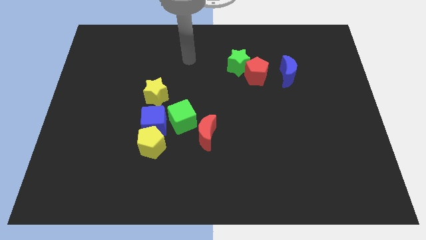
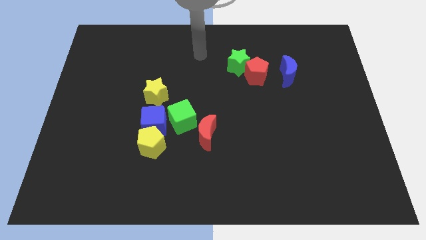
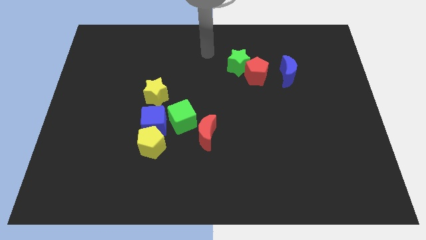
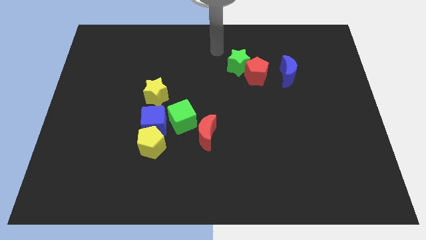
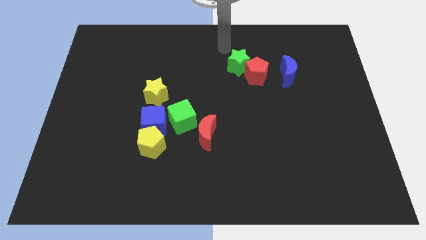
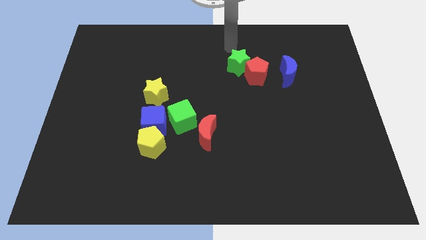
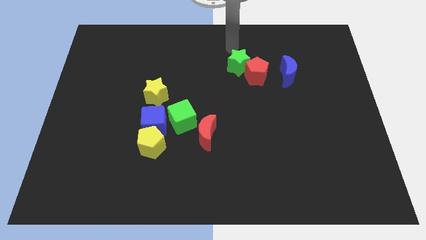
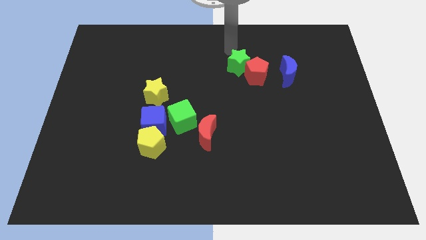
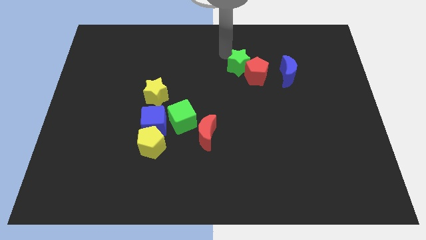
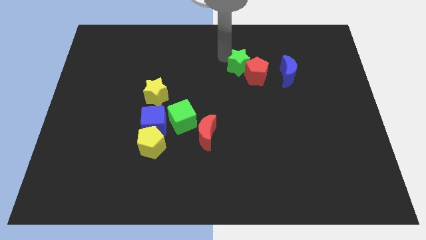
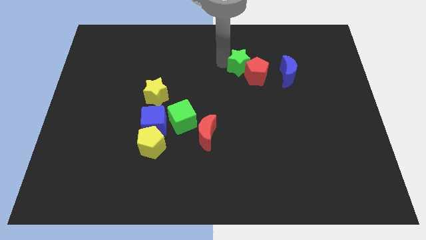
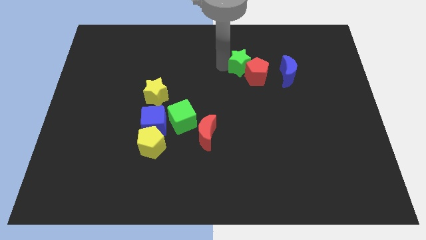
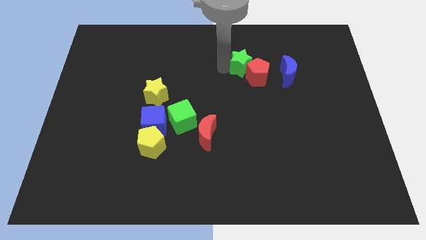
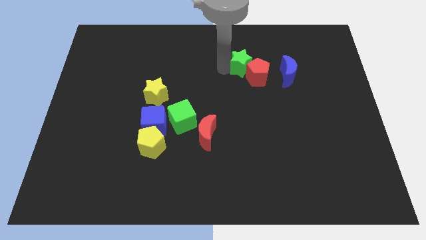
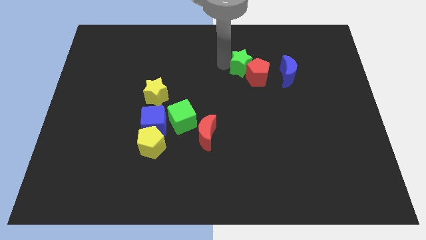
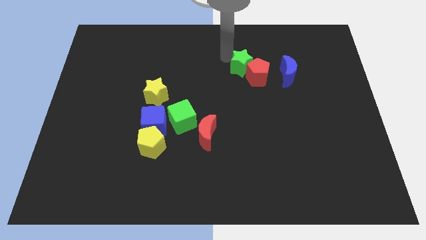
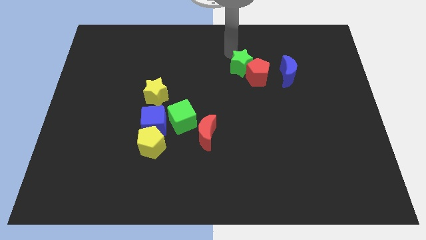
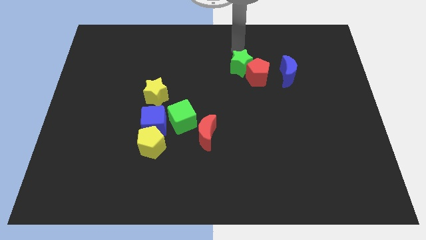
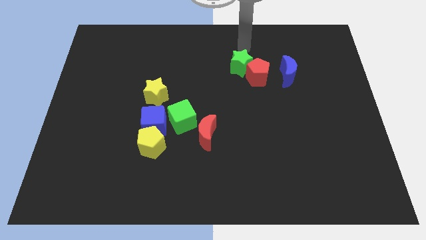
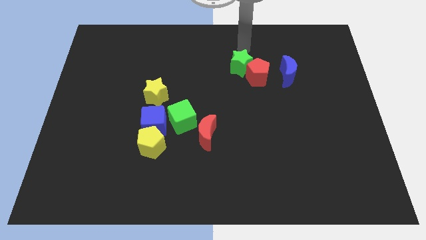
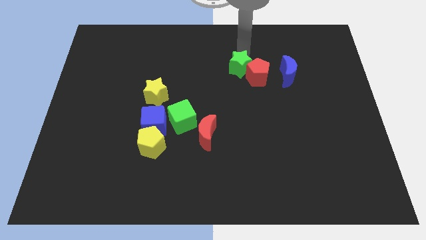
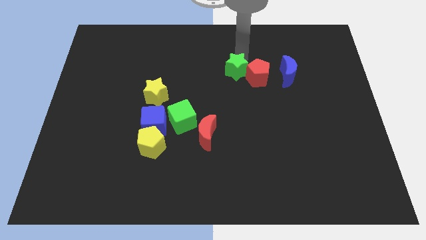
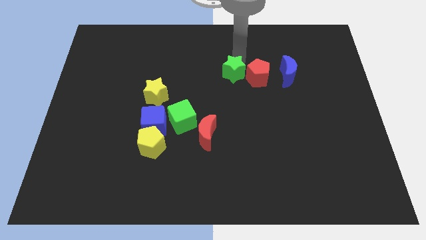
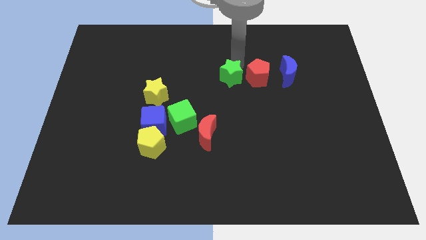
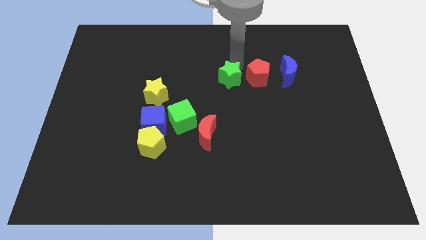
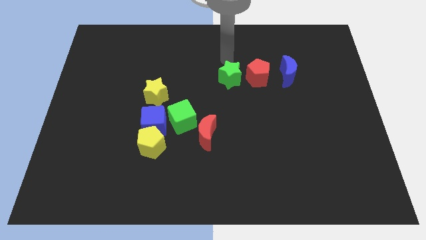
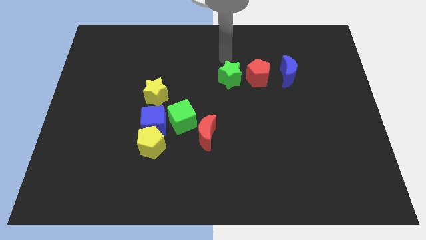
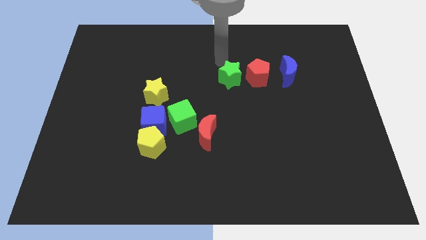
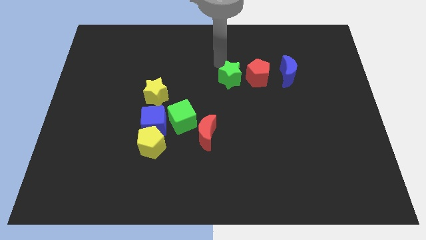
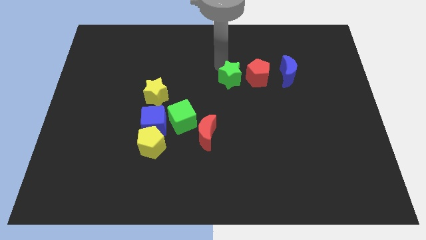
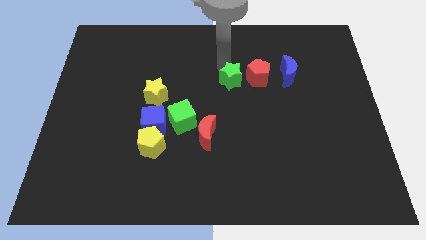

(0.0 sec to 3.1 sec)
place green star to the left of red pentagon

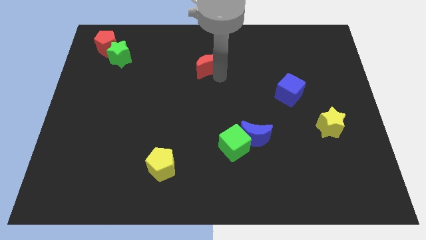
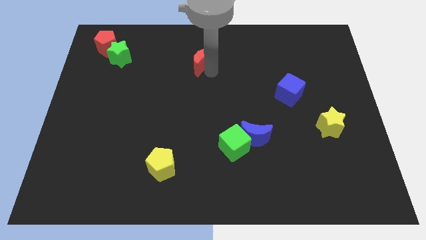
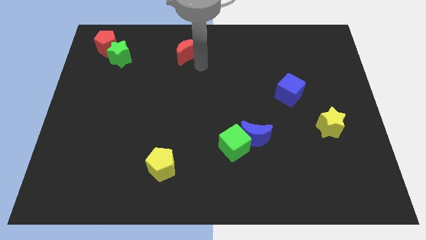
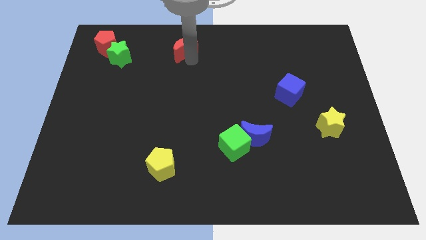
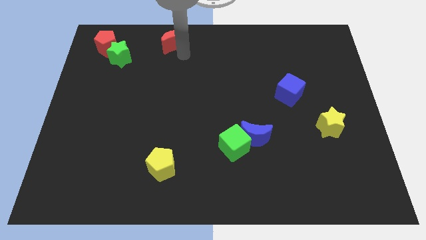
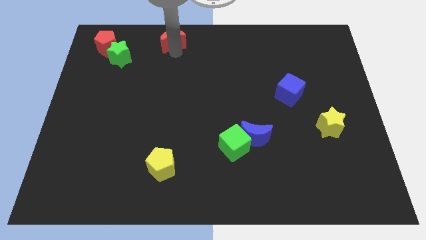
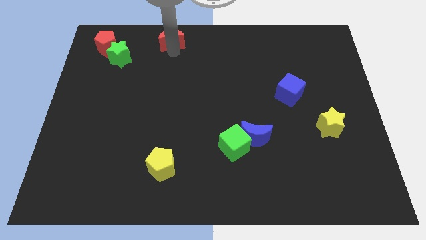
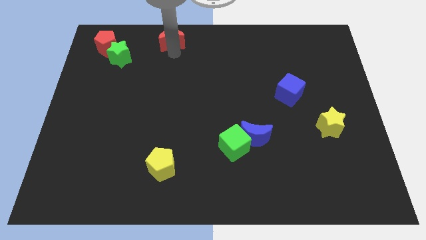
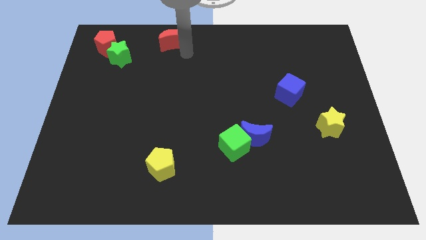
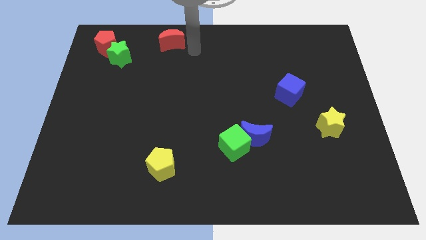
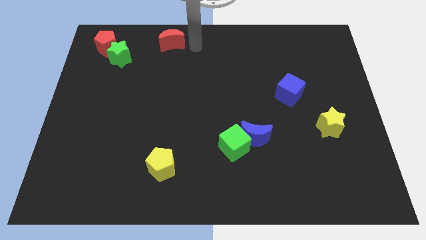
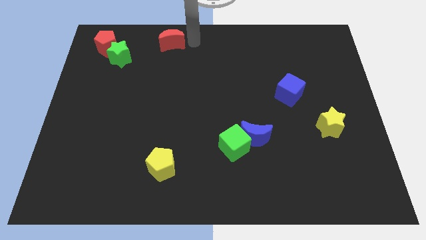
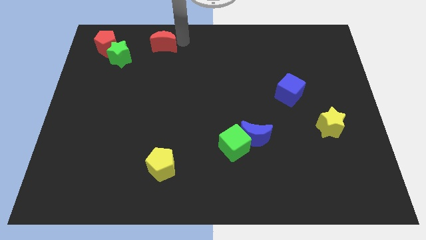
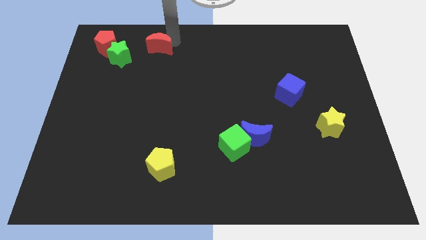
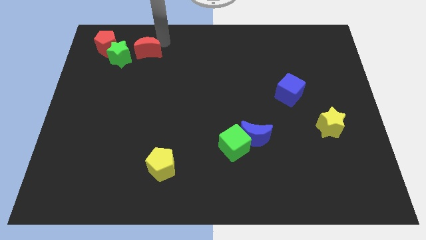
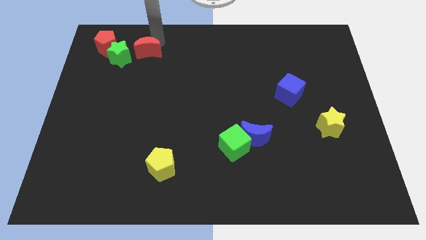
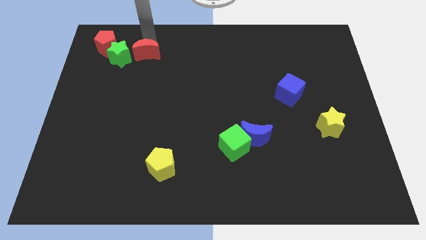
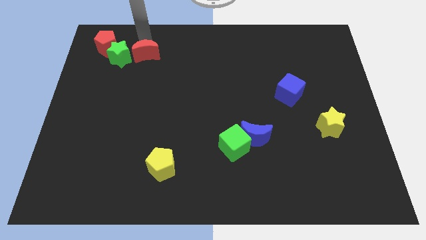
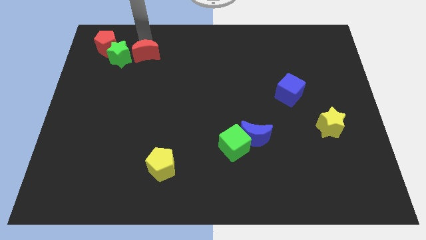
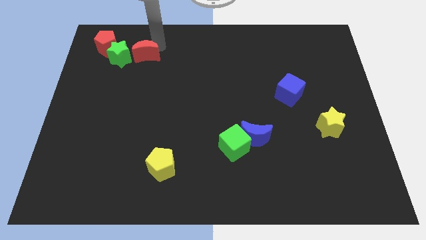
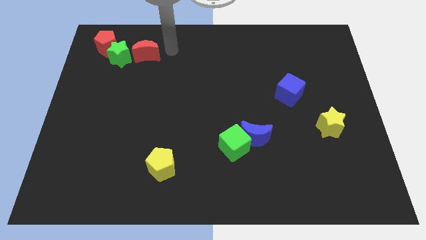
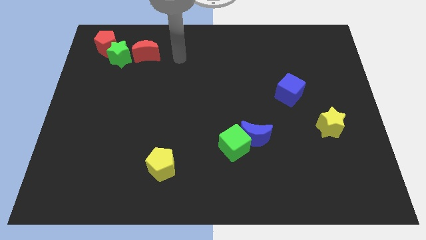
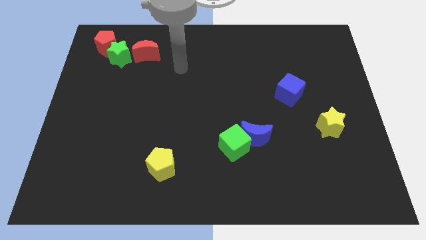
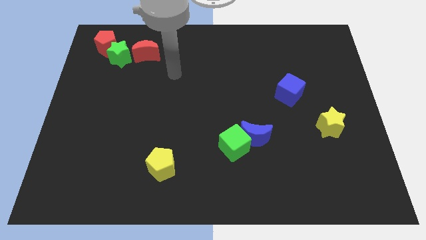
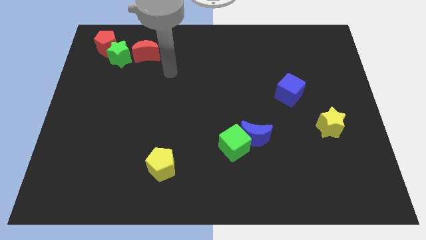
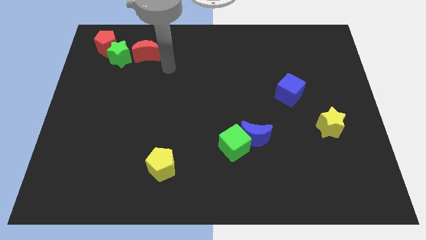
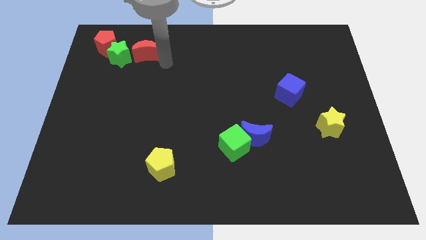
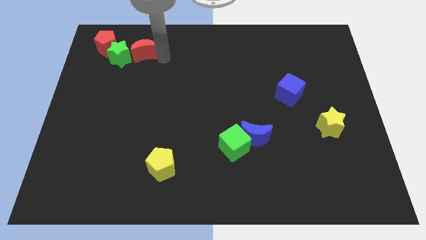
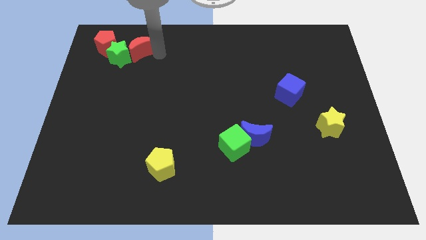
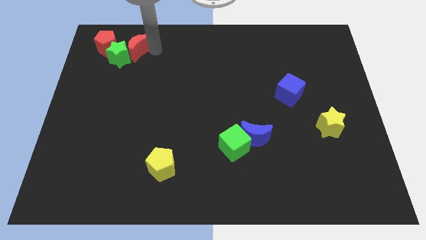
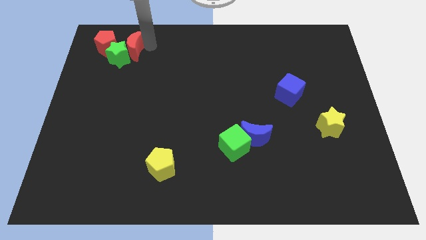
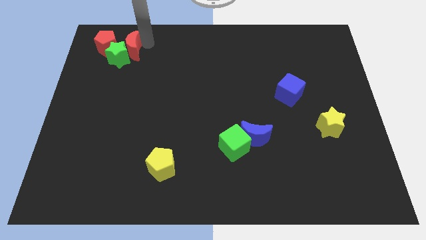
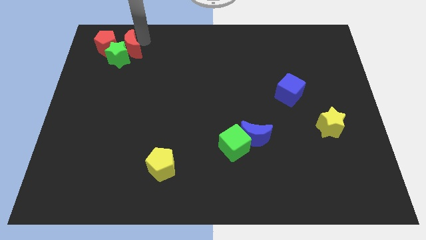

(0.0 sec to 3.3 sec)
push the red moon into the green star

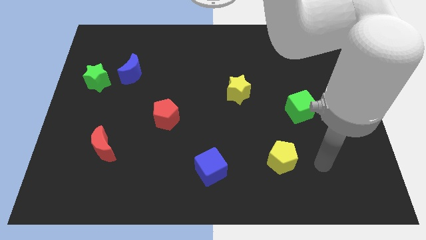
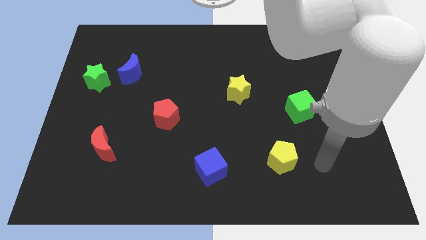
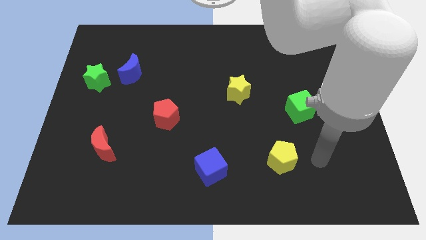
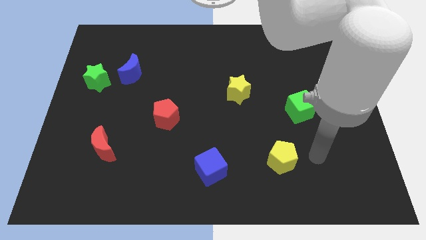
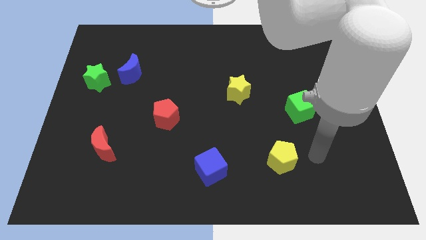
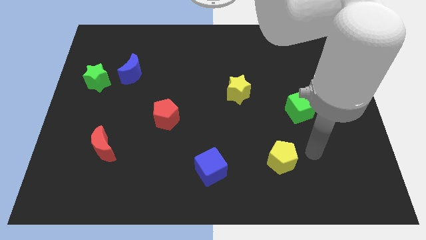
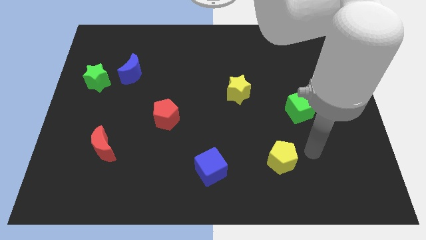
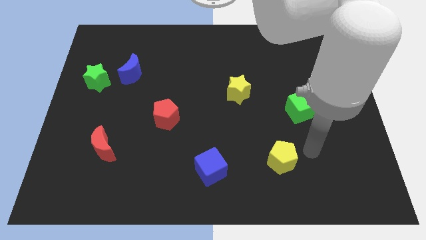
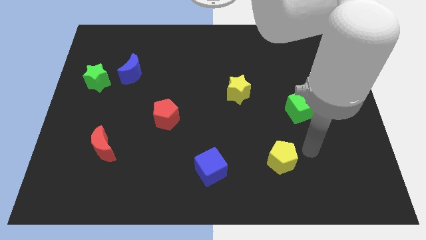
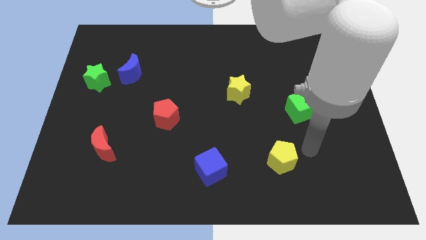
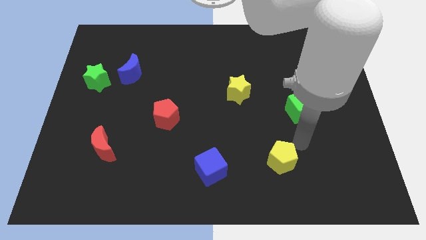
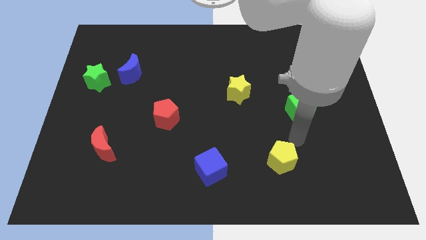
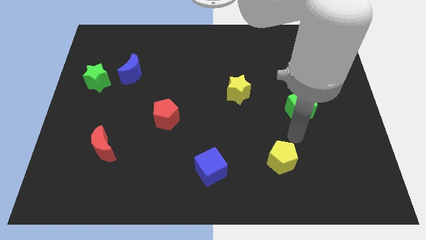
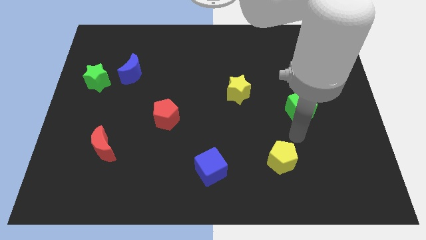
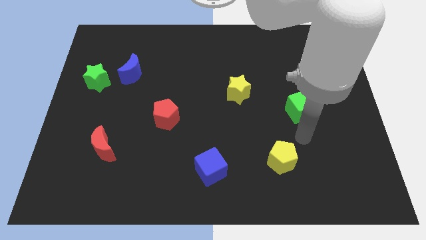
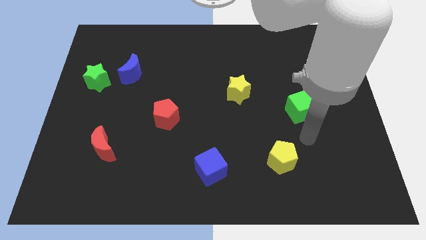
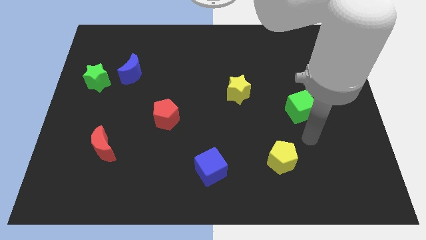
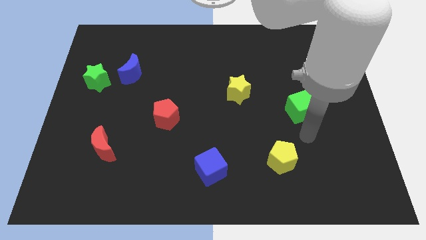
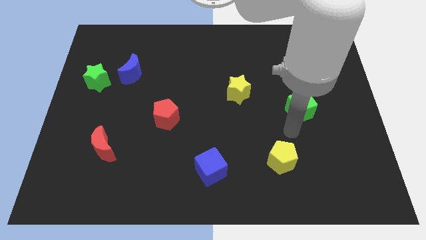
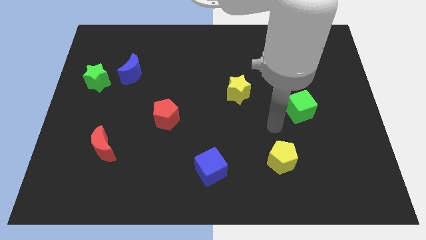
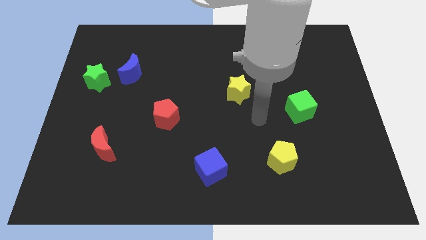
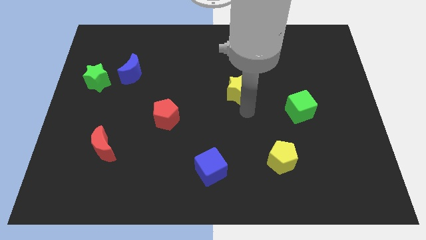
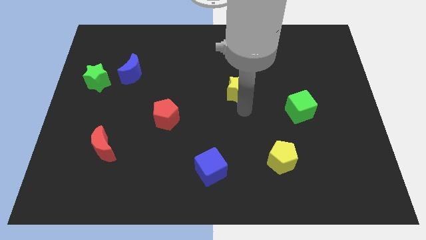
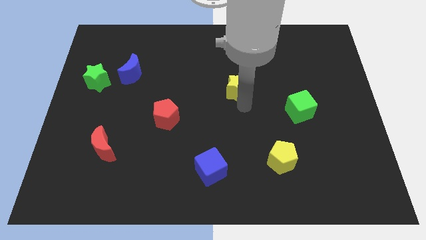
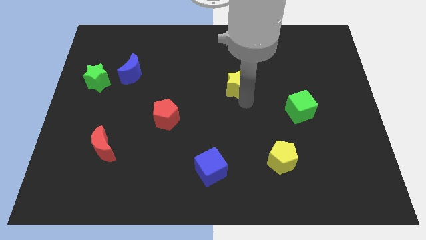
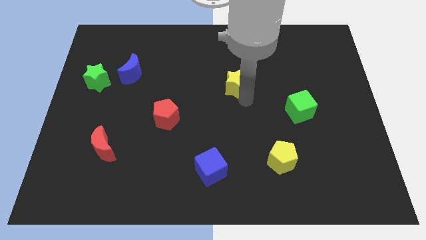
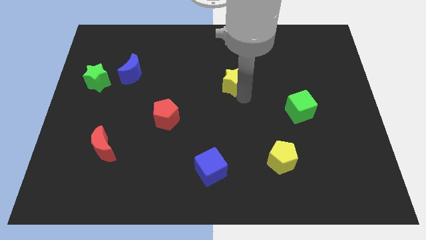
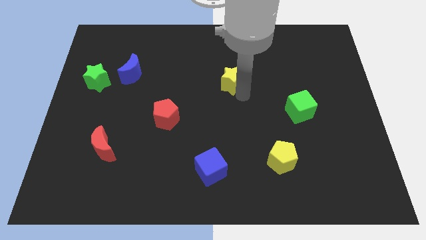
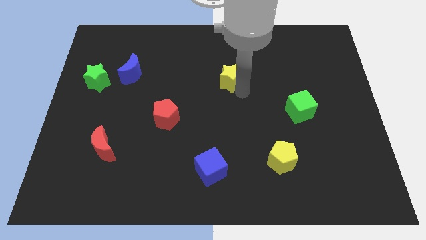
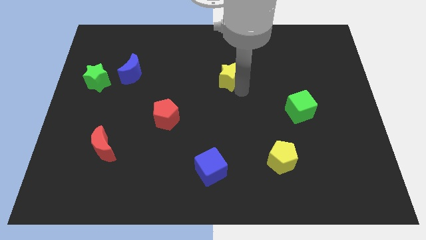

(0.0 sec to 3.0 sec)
move the yellow star to the top of the board
